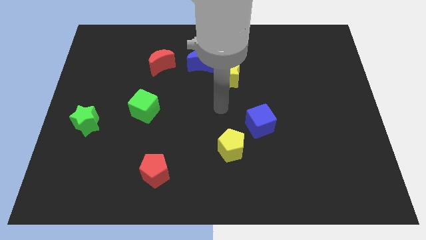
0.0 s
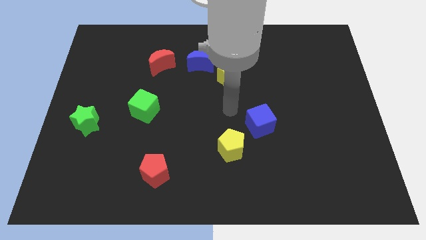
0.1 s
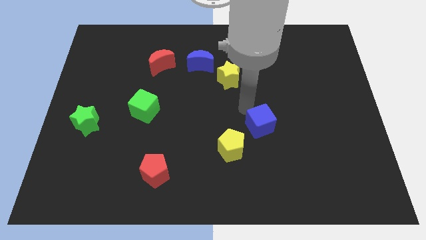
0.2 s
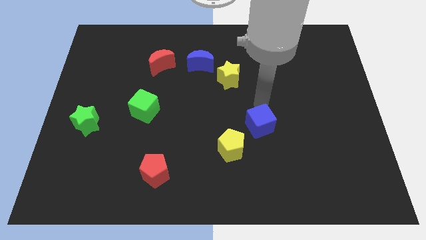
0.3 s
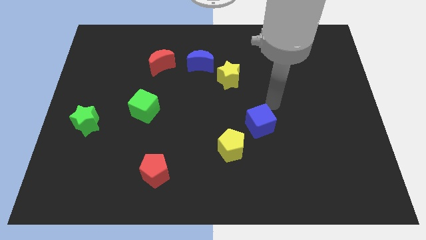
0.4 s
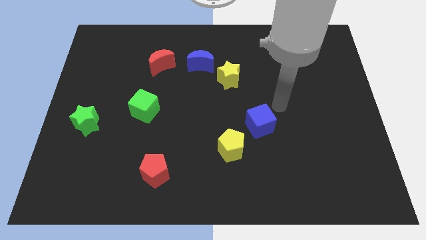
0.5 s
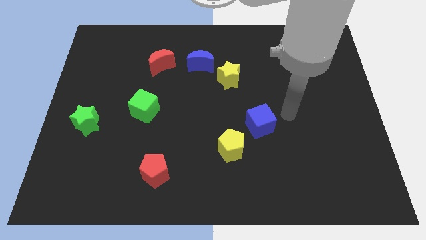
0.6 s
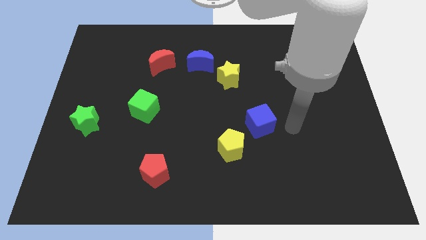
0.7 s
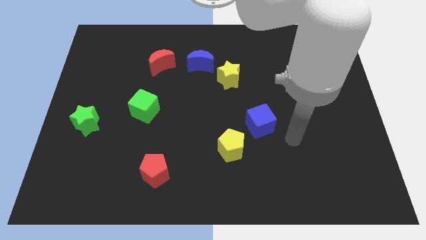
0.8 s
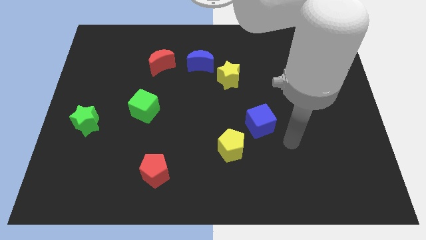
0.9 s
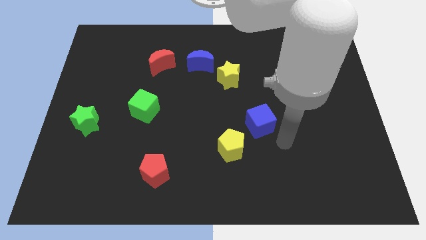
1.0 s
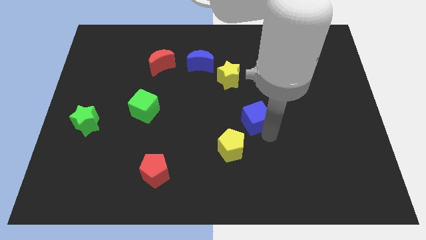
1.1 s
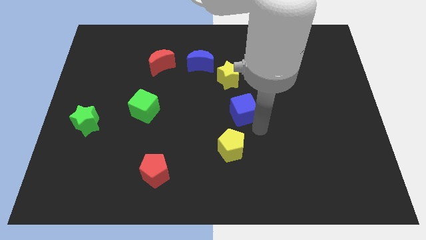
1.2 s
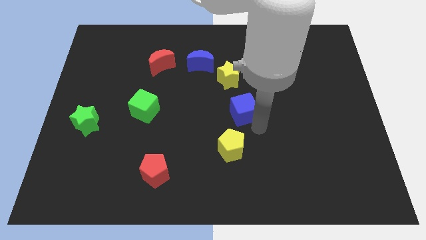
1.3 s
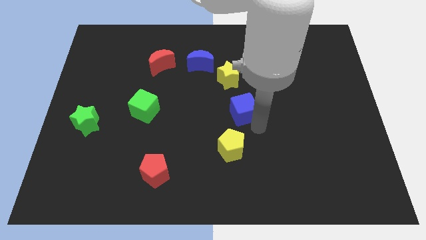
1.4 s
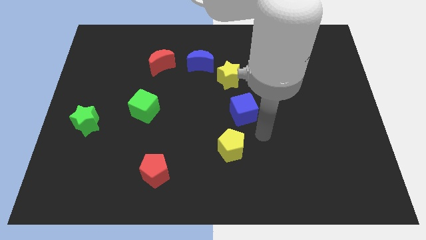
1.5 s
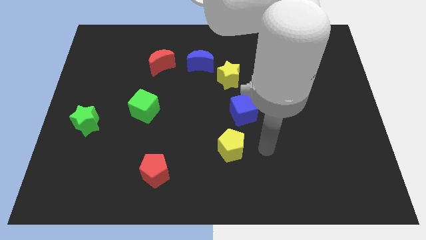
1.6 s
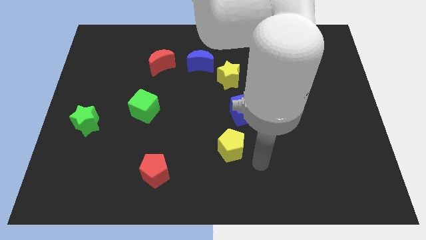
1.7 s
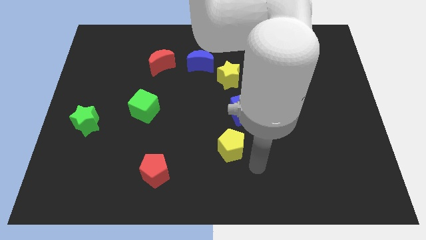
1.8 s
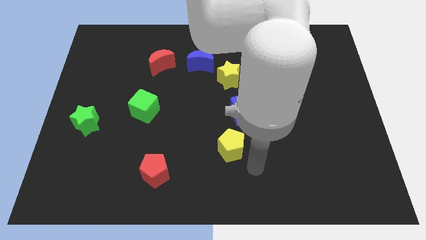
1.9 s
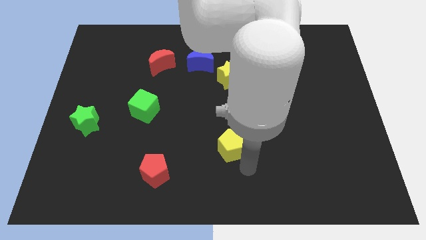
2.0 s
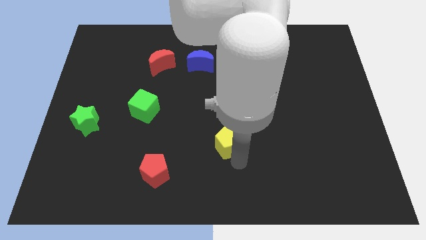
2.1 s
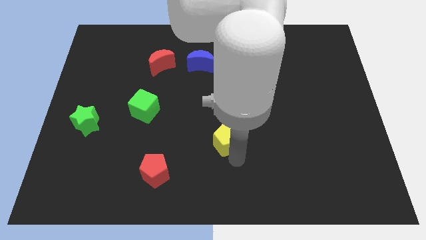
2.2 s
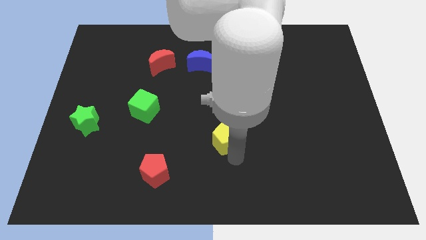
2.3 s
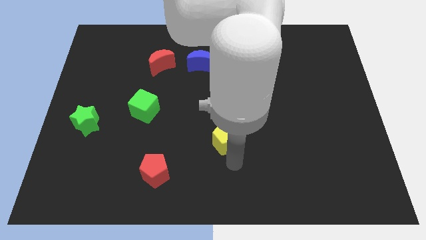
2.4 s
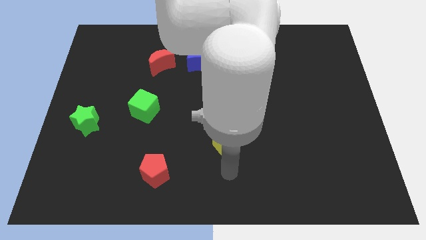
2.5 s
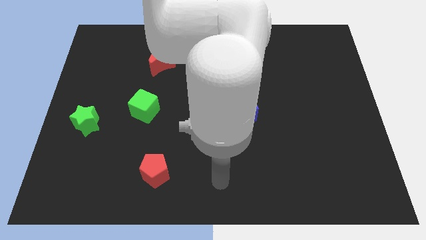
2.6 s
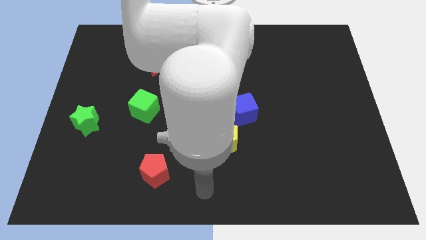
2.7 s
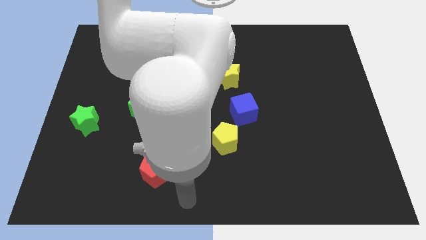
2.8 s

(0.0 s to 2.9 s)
move blue cube to parallel right of green cube

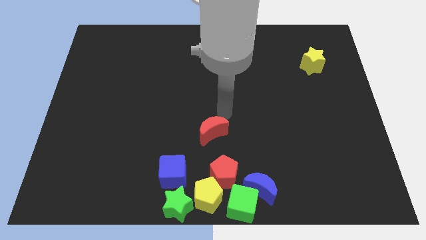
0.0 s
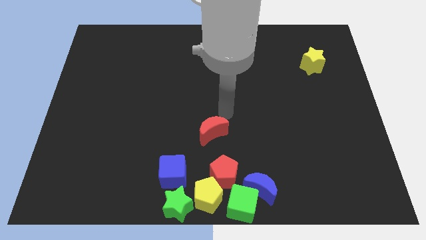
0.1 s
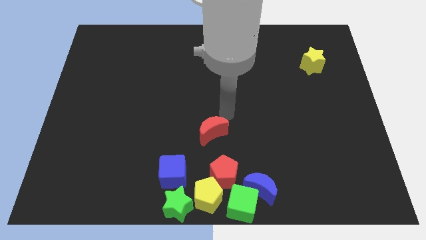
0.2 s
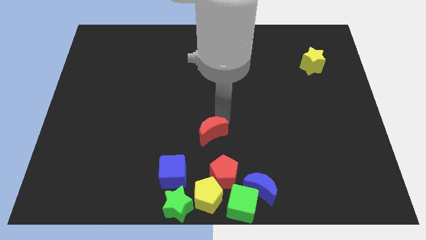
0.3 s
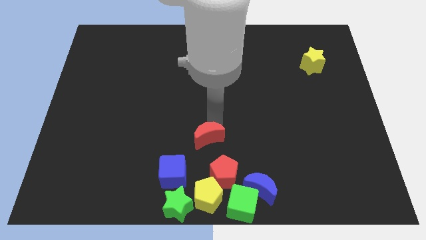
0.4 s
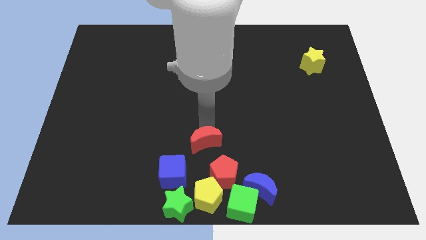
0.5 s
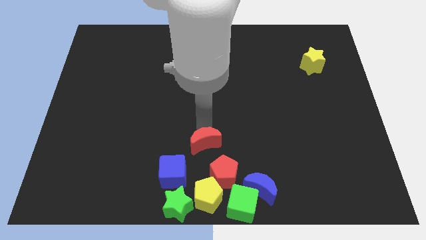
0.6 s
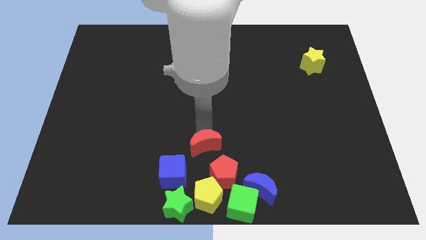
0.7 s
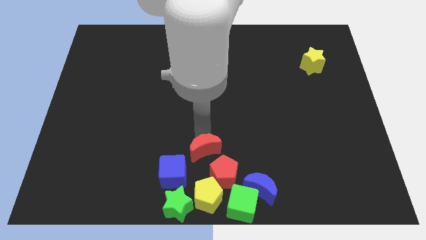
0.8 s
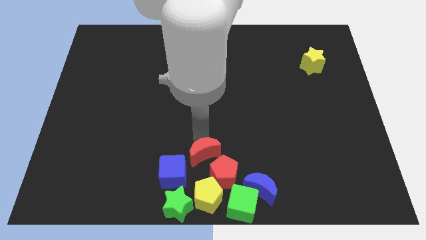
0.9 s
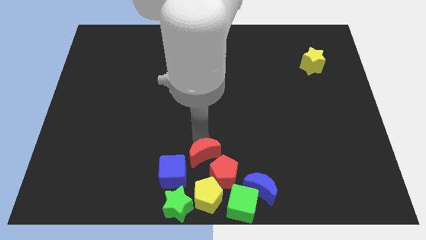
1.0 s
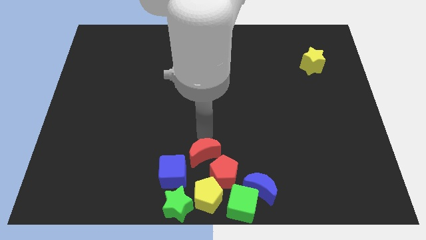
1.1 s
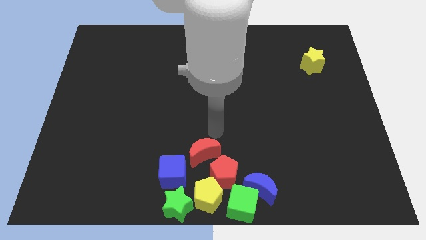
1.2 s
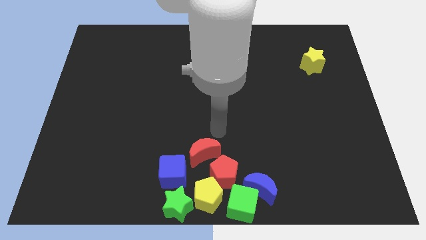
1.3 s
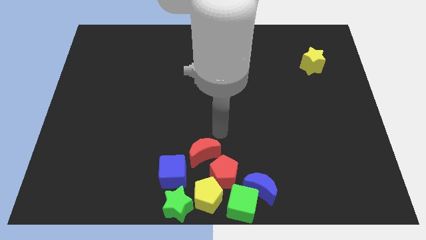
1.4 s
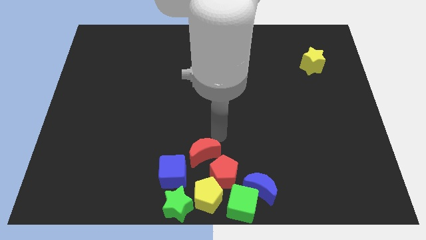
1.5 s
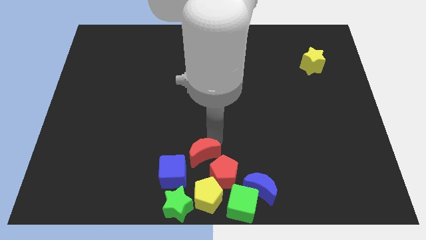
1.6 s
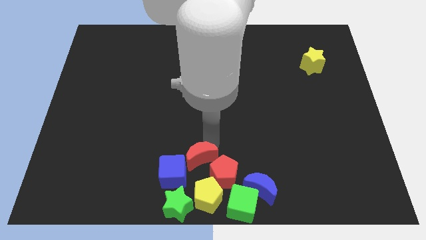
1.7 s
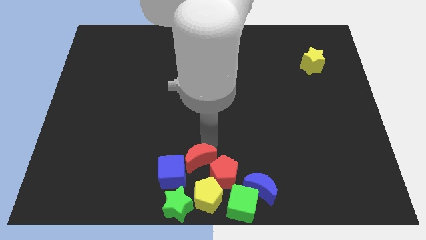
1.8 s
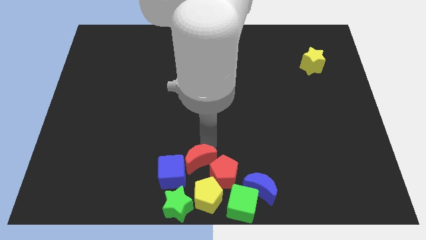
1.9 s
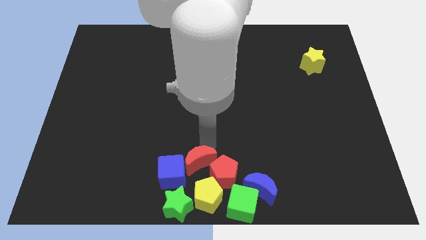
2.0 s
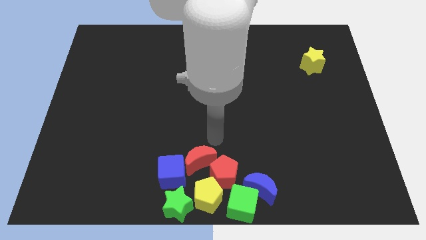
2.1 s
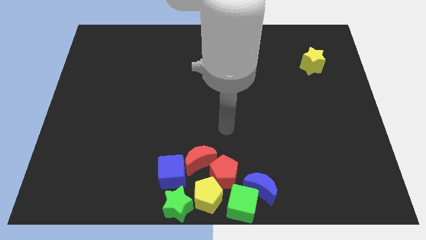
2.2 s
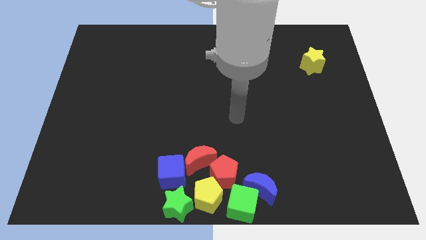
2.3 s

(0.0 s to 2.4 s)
push the red crescent in between the red pentagon and blue cube

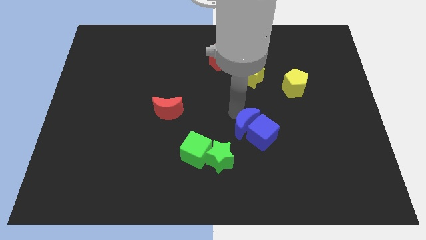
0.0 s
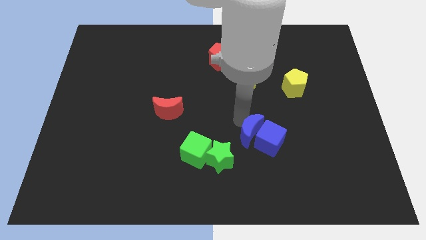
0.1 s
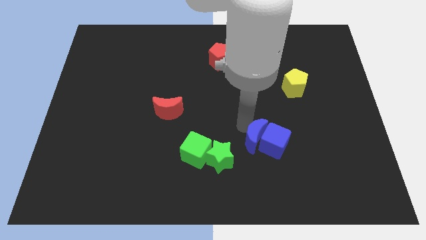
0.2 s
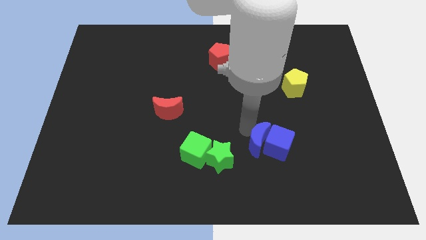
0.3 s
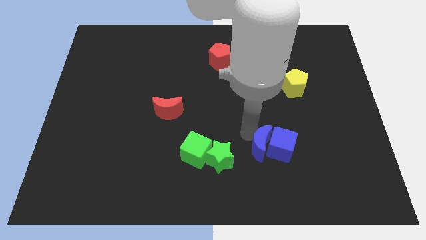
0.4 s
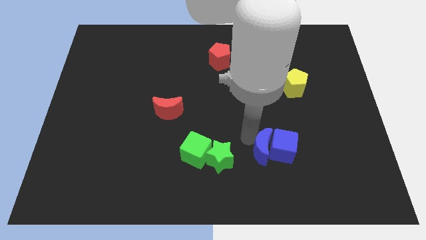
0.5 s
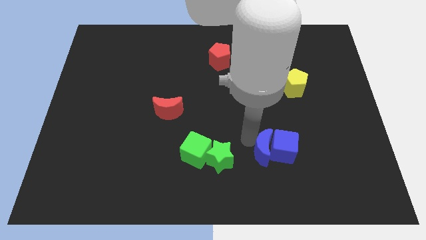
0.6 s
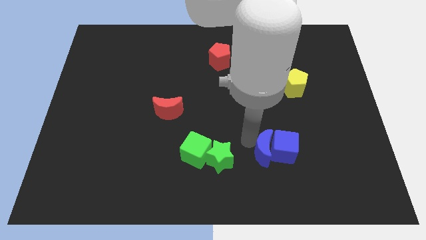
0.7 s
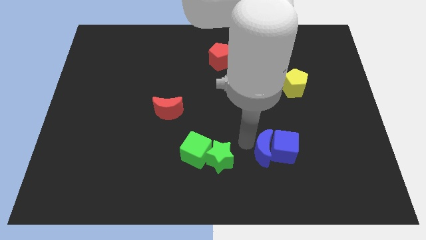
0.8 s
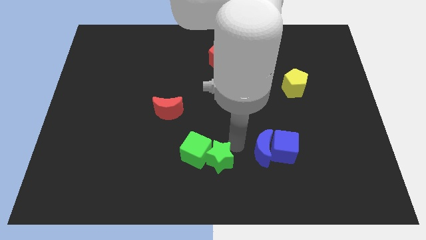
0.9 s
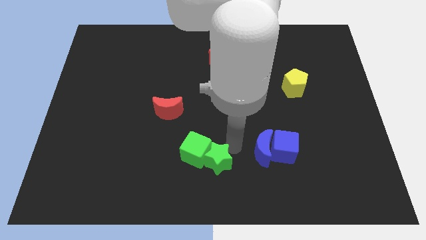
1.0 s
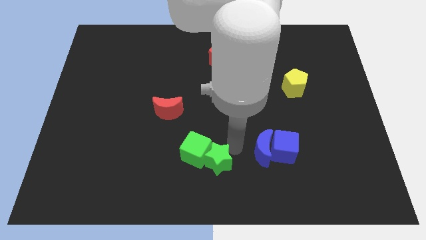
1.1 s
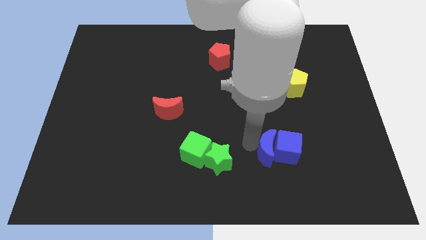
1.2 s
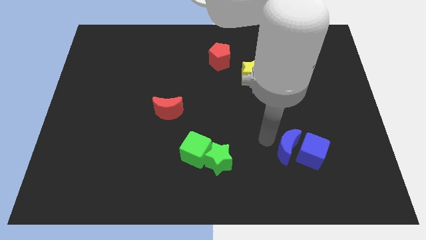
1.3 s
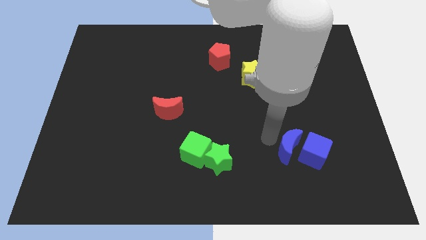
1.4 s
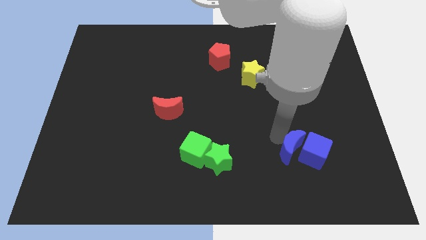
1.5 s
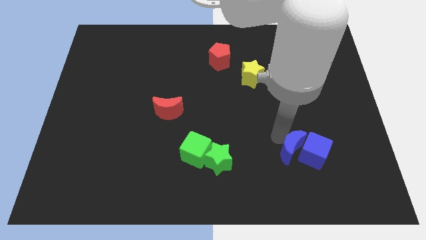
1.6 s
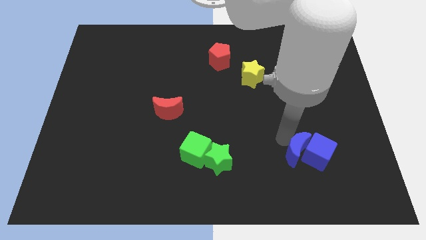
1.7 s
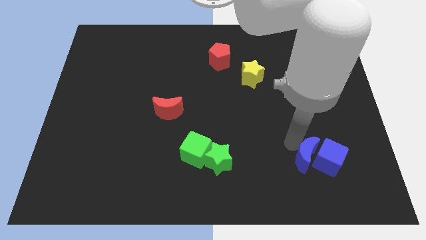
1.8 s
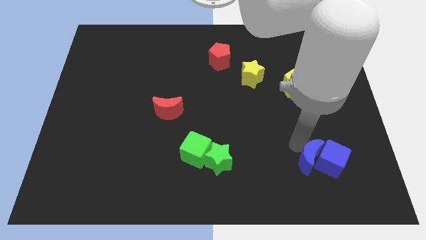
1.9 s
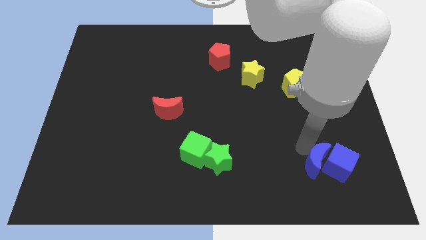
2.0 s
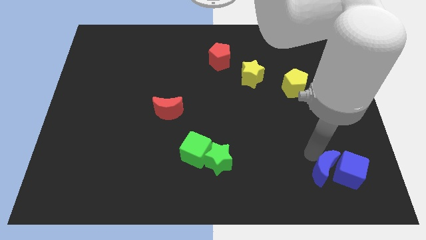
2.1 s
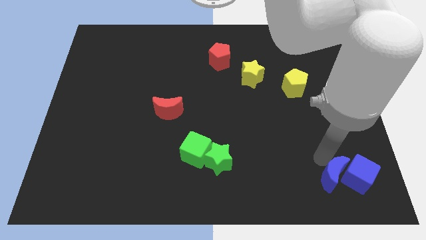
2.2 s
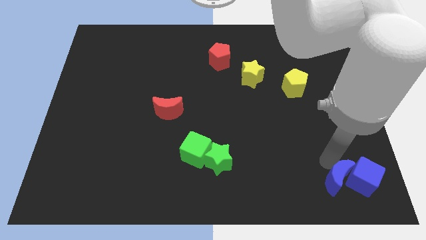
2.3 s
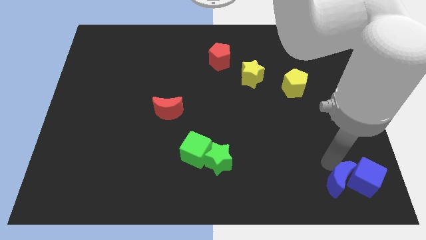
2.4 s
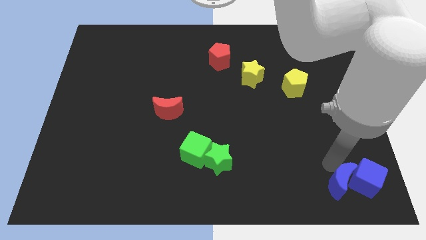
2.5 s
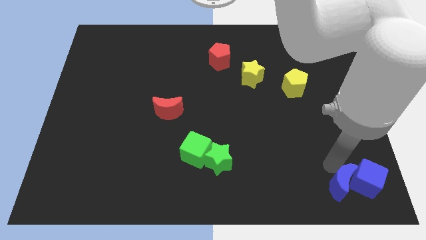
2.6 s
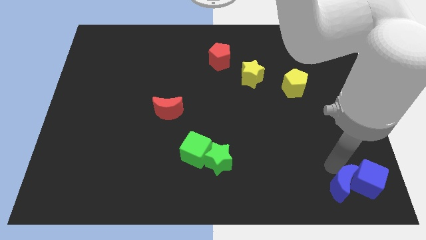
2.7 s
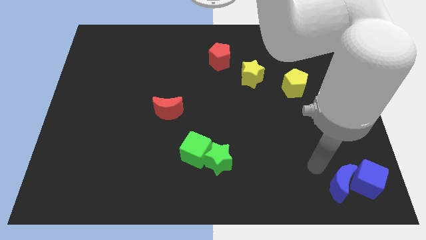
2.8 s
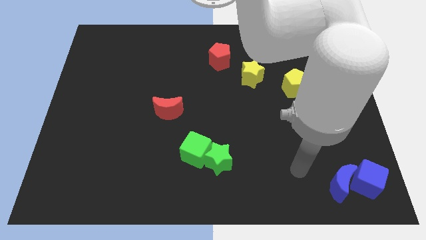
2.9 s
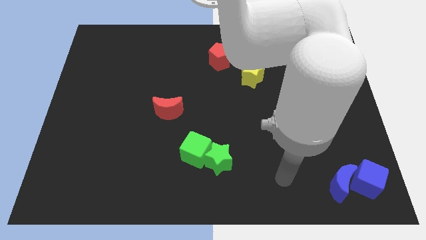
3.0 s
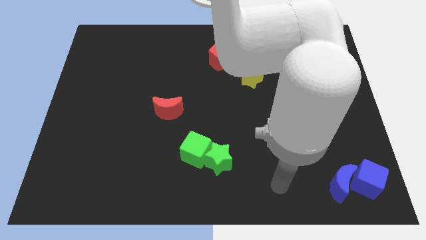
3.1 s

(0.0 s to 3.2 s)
move blue cube and blue moon to the bottom right corner of the board

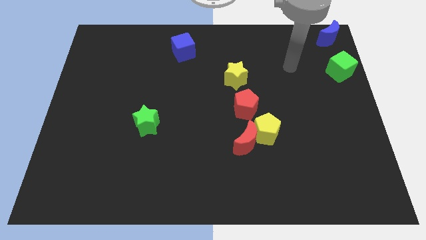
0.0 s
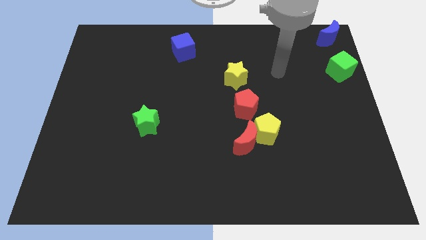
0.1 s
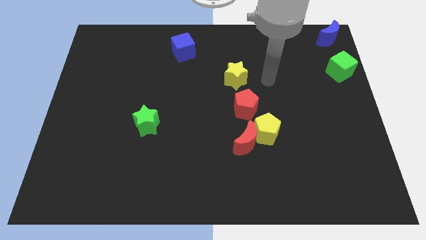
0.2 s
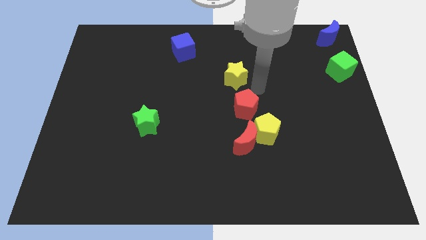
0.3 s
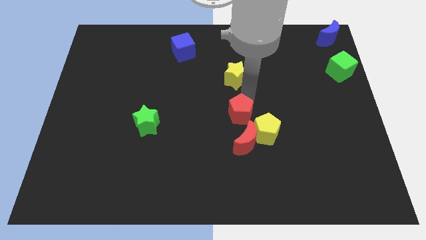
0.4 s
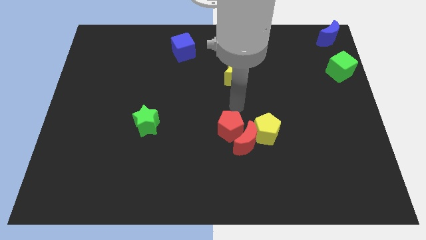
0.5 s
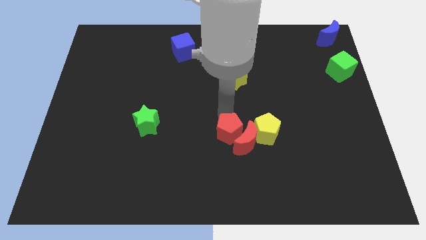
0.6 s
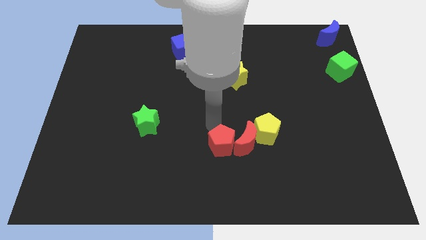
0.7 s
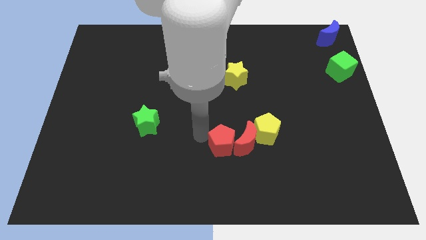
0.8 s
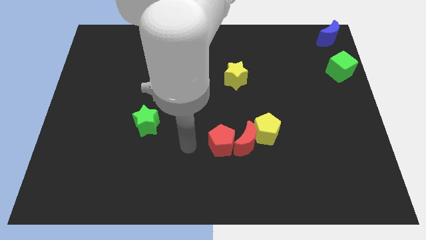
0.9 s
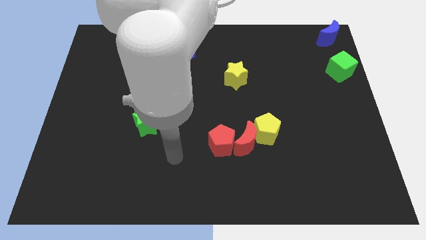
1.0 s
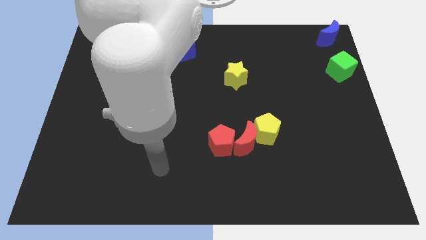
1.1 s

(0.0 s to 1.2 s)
push the red pentagon away from the middle of yellow star and yellow pentagon
